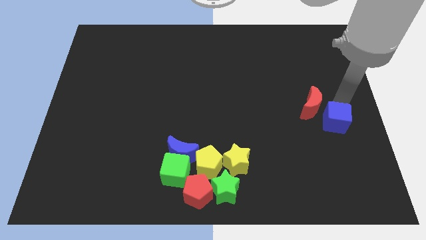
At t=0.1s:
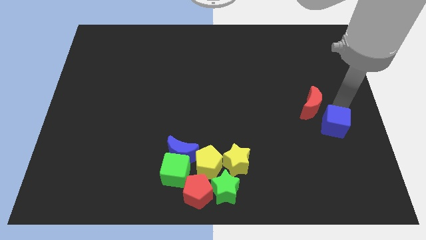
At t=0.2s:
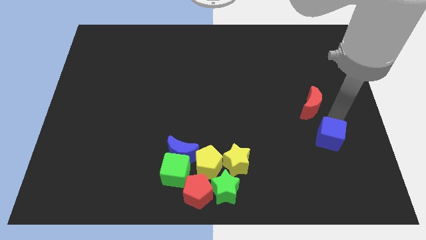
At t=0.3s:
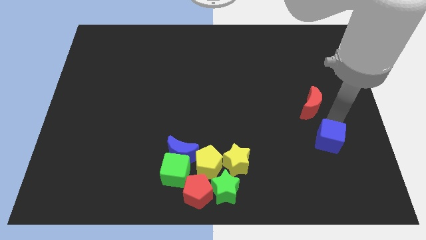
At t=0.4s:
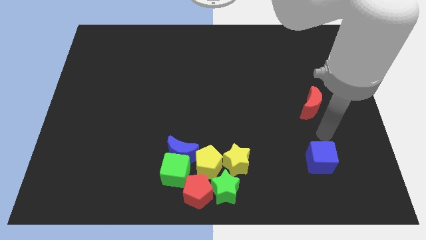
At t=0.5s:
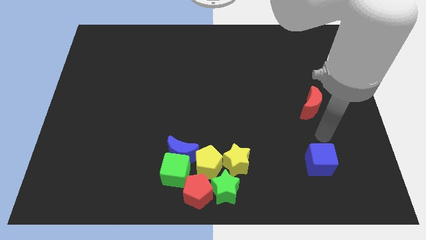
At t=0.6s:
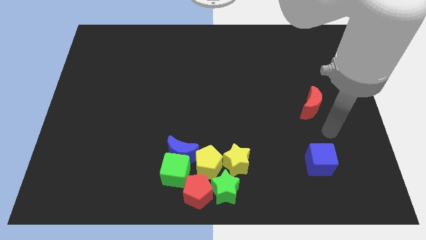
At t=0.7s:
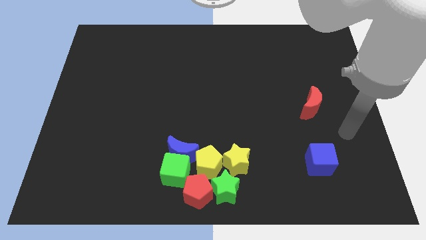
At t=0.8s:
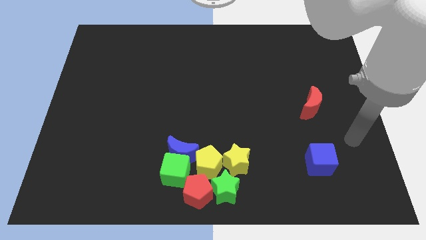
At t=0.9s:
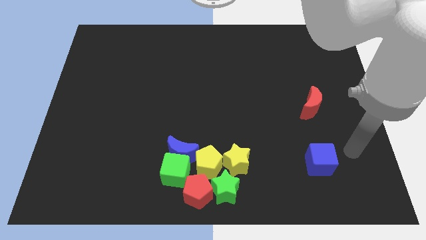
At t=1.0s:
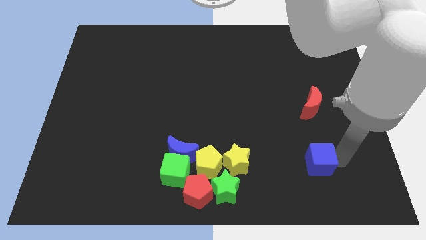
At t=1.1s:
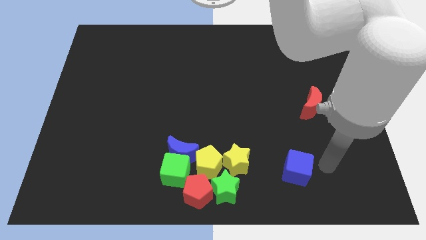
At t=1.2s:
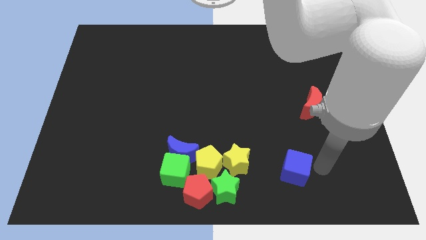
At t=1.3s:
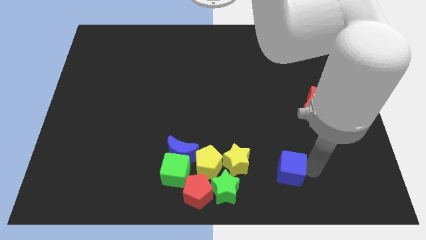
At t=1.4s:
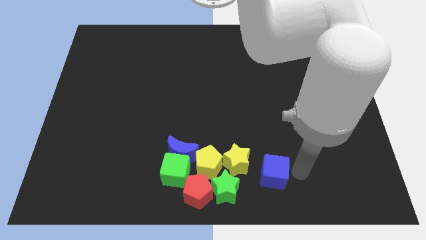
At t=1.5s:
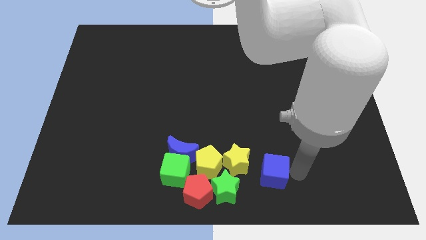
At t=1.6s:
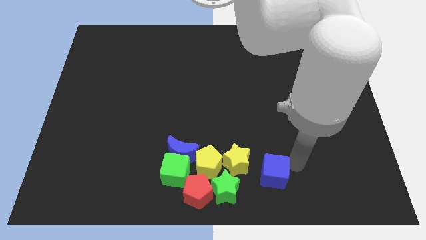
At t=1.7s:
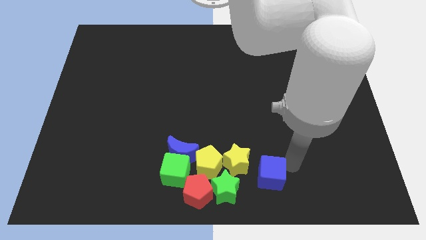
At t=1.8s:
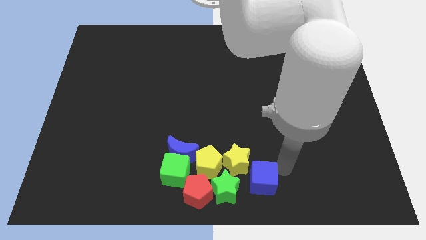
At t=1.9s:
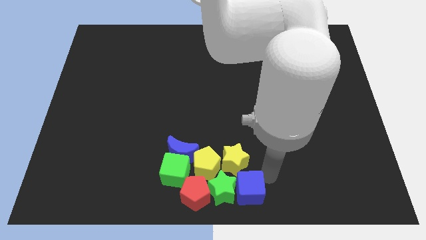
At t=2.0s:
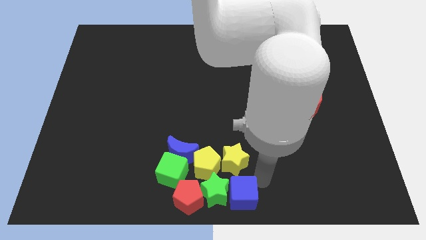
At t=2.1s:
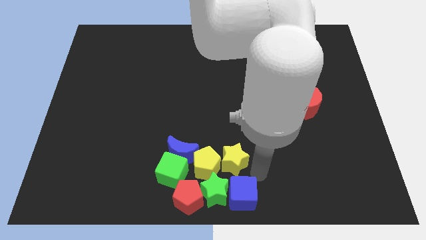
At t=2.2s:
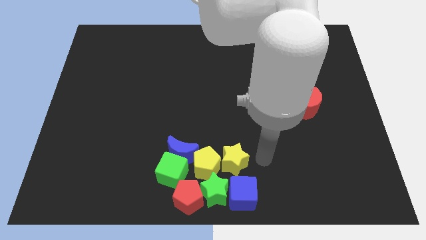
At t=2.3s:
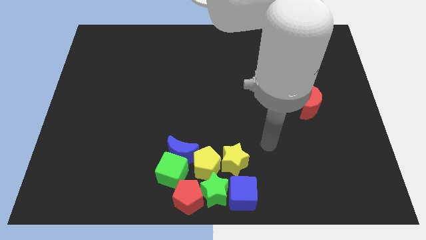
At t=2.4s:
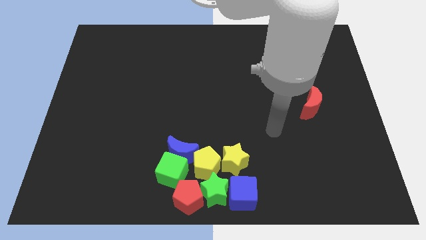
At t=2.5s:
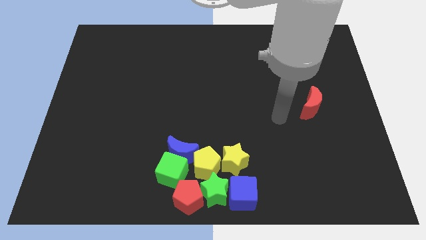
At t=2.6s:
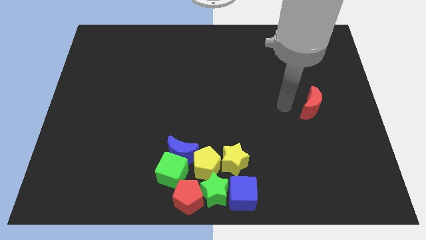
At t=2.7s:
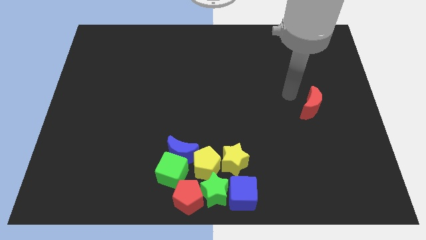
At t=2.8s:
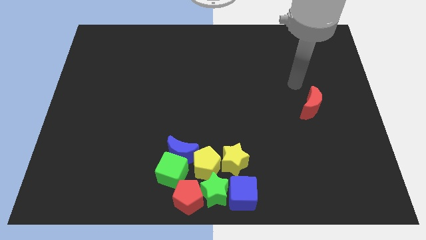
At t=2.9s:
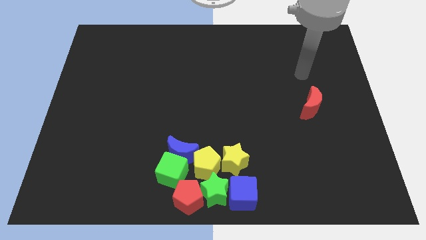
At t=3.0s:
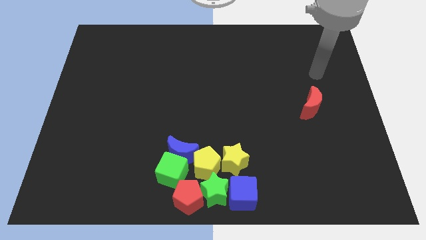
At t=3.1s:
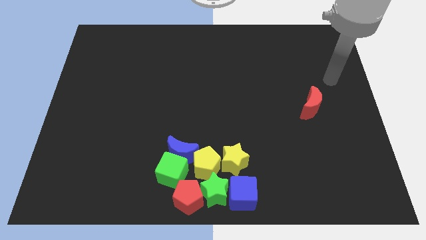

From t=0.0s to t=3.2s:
drag the blue cube right to the green star

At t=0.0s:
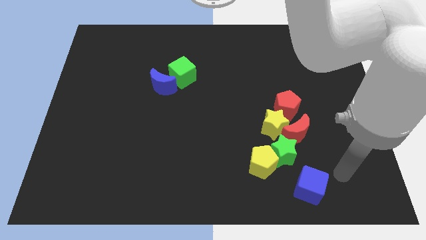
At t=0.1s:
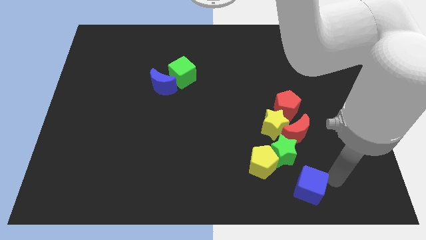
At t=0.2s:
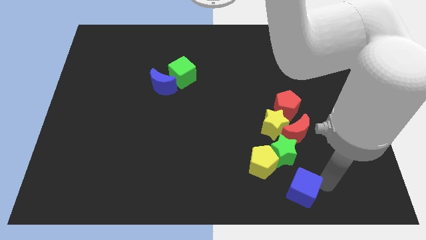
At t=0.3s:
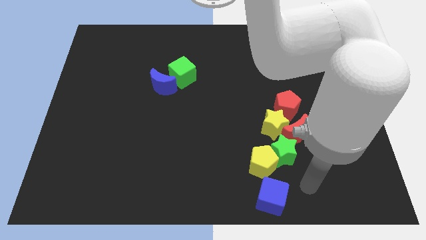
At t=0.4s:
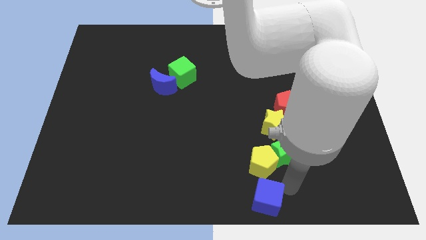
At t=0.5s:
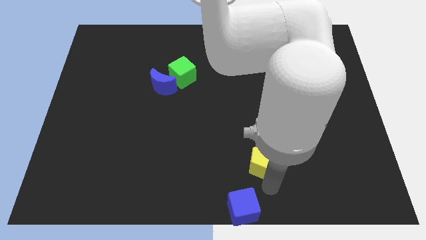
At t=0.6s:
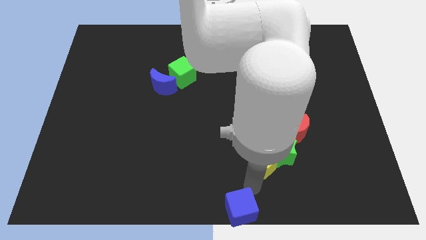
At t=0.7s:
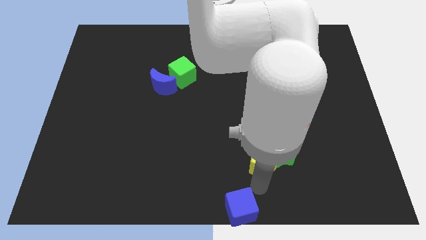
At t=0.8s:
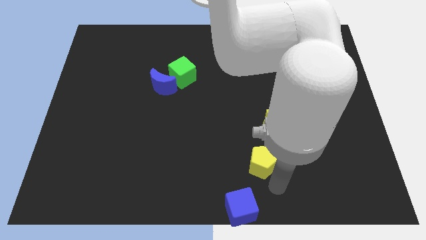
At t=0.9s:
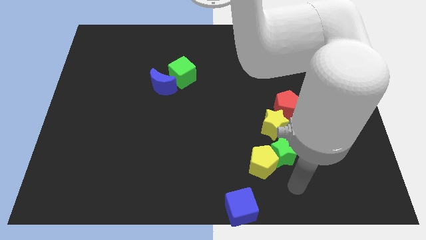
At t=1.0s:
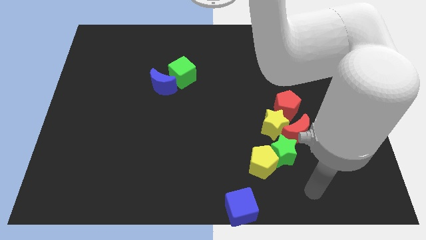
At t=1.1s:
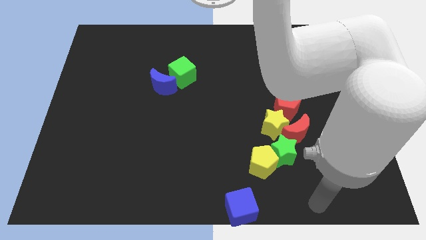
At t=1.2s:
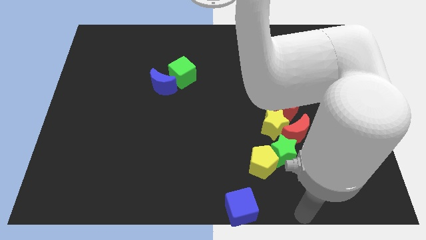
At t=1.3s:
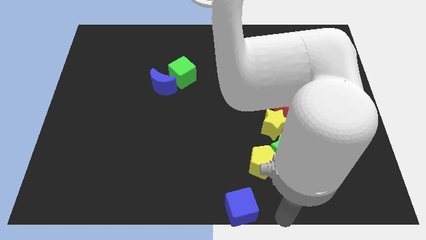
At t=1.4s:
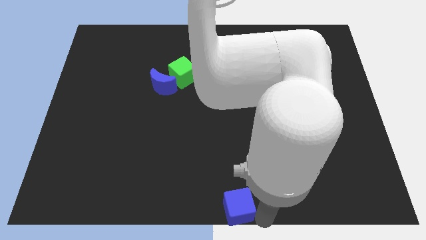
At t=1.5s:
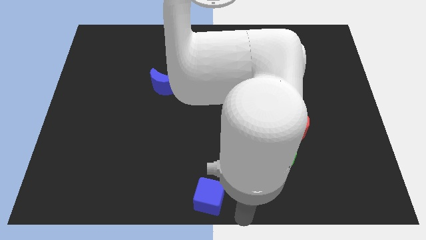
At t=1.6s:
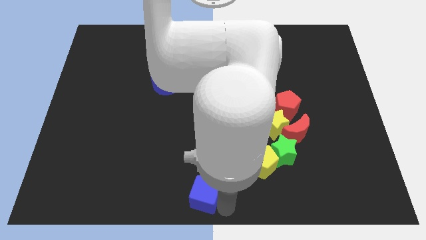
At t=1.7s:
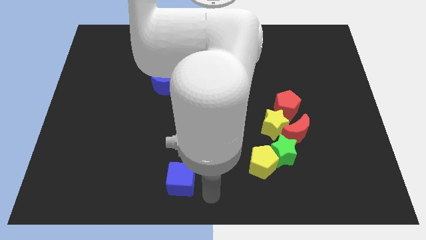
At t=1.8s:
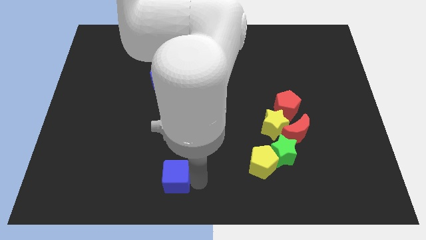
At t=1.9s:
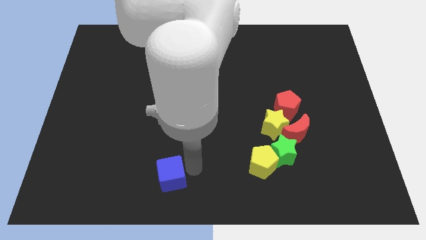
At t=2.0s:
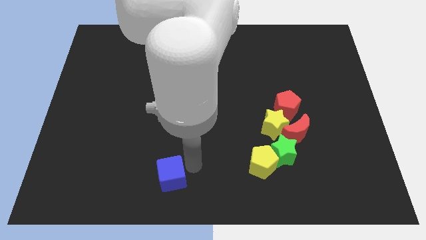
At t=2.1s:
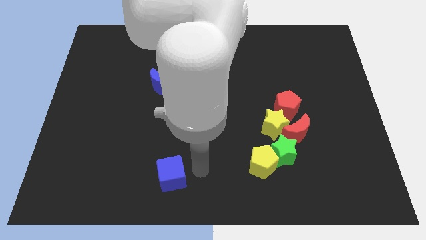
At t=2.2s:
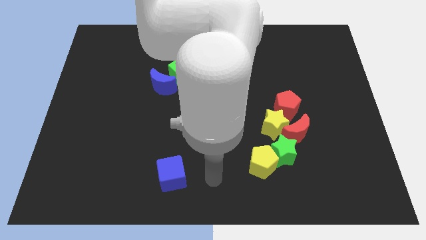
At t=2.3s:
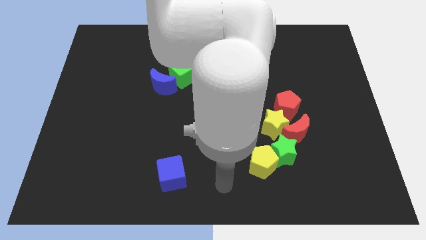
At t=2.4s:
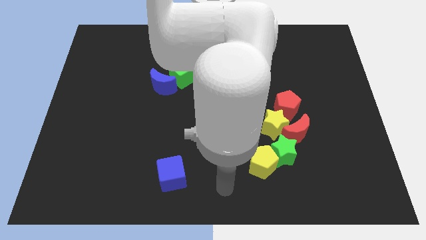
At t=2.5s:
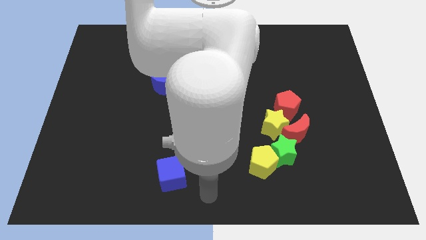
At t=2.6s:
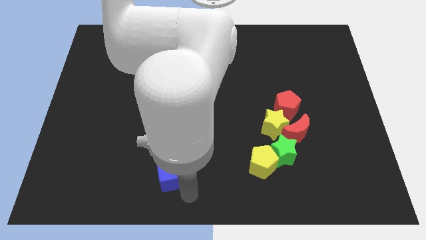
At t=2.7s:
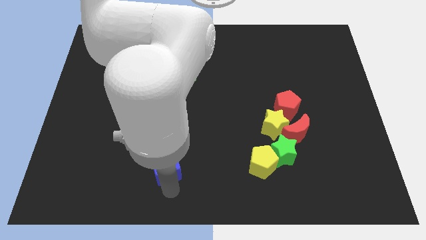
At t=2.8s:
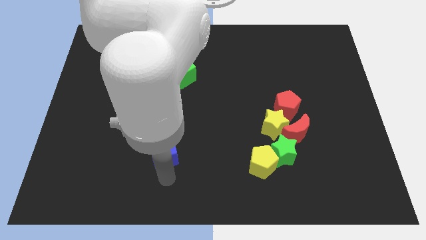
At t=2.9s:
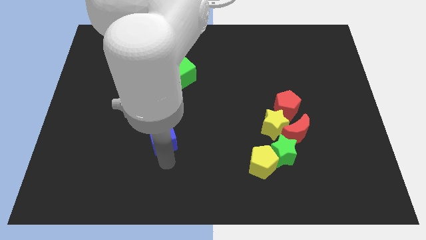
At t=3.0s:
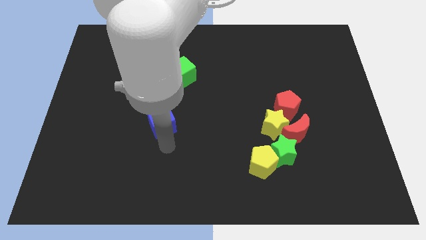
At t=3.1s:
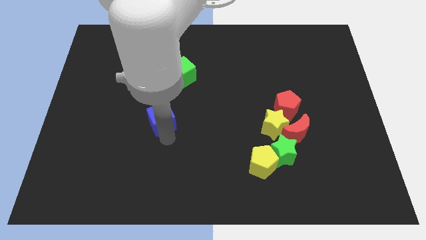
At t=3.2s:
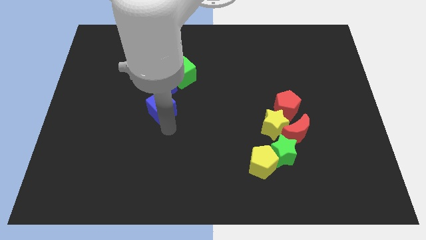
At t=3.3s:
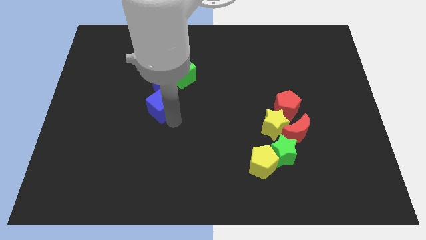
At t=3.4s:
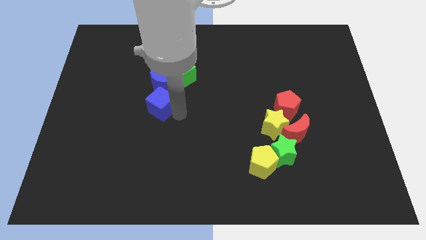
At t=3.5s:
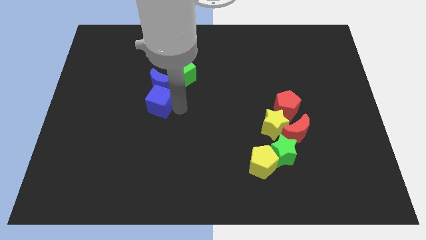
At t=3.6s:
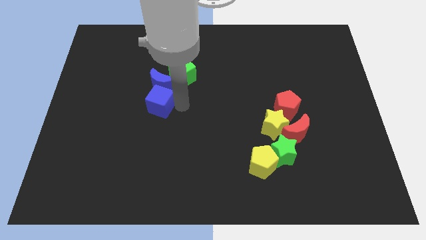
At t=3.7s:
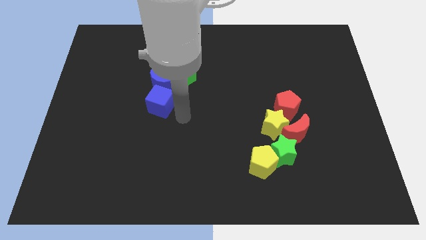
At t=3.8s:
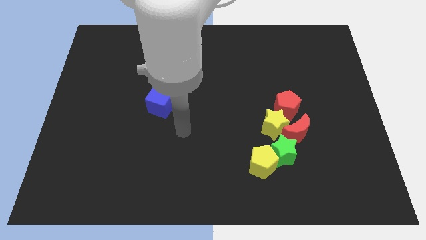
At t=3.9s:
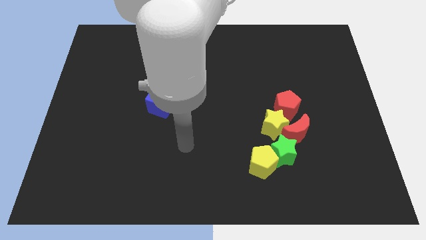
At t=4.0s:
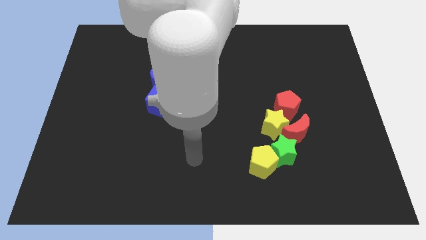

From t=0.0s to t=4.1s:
slide blue cube into blue moon

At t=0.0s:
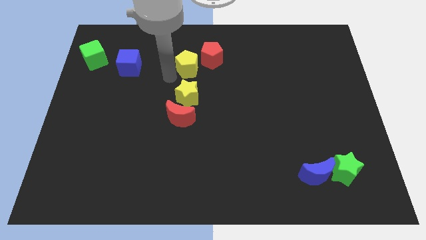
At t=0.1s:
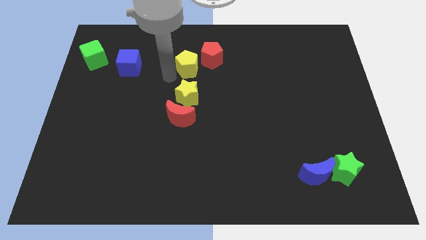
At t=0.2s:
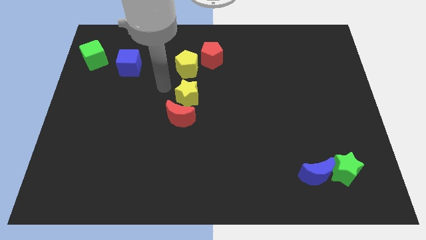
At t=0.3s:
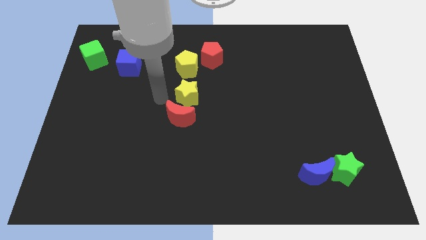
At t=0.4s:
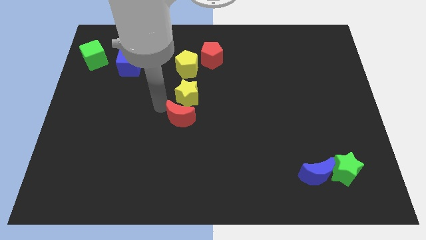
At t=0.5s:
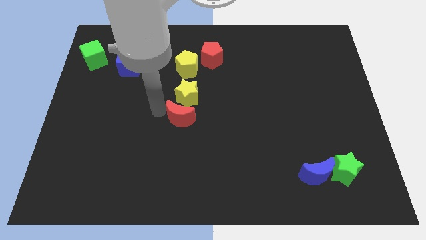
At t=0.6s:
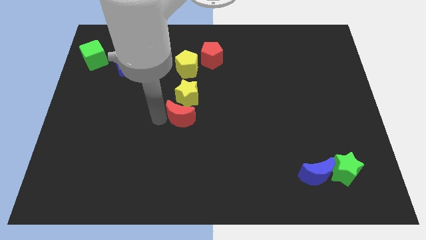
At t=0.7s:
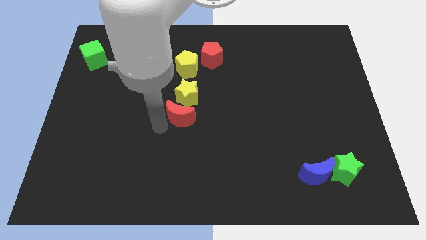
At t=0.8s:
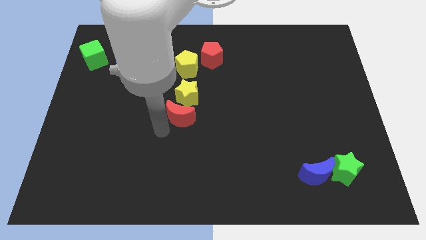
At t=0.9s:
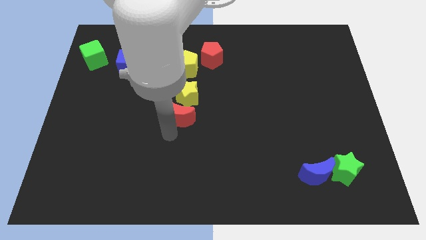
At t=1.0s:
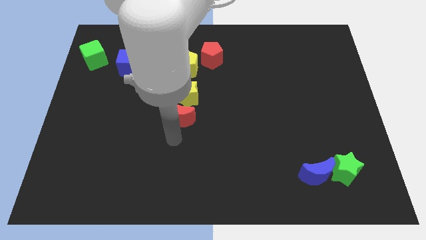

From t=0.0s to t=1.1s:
point your arm at the bottom of red moon

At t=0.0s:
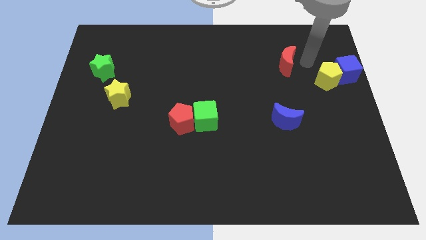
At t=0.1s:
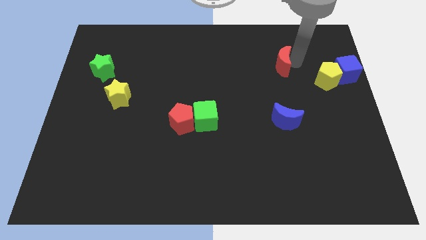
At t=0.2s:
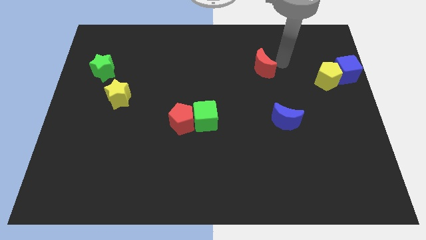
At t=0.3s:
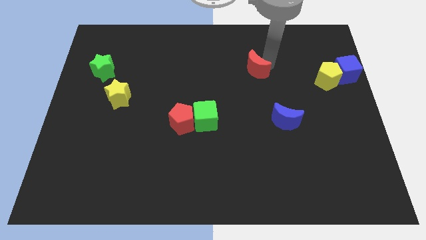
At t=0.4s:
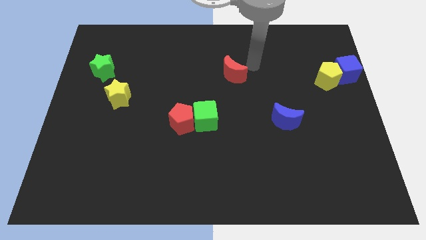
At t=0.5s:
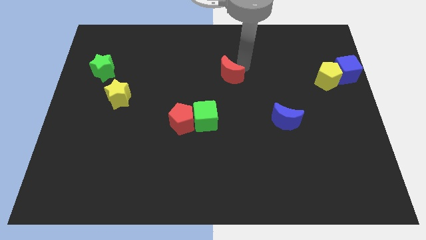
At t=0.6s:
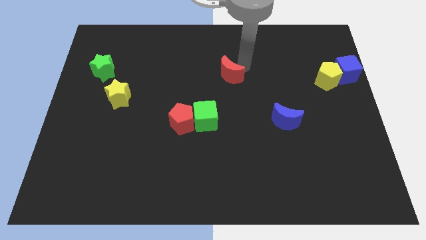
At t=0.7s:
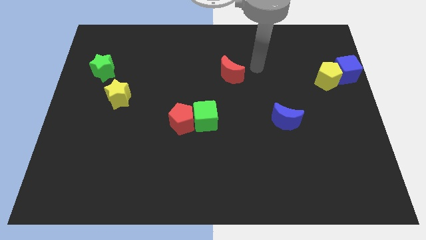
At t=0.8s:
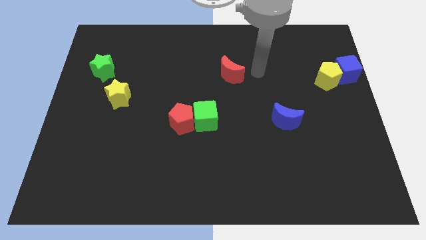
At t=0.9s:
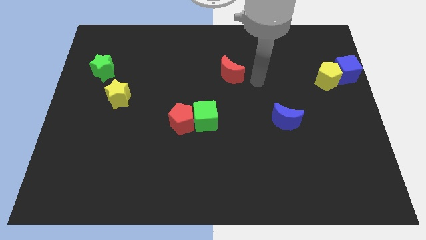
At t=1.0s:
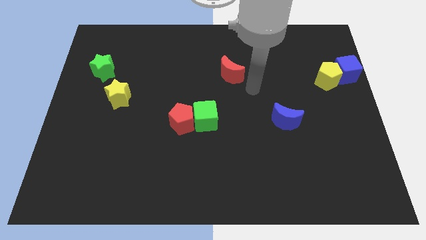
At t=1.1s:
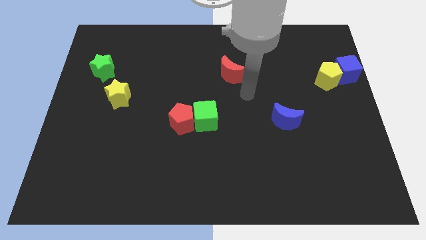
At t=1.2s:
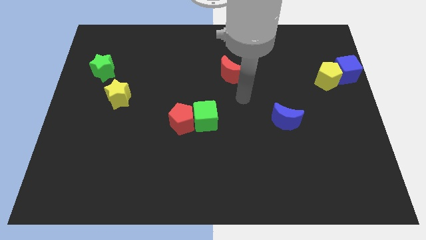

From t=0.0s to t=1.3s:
slide the red crescent towards left a bit
